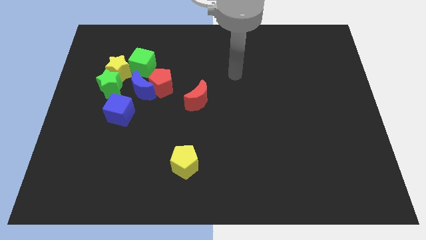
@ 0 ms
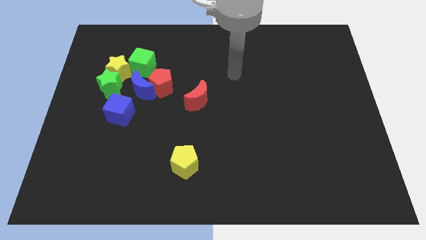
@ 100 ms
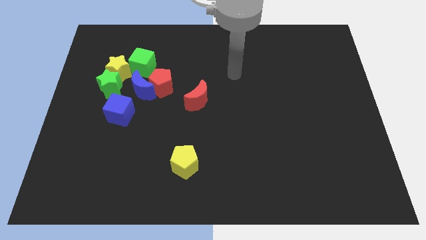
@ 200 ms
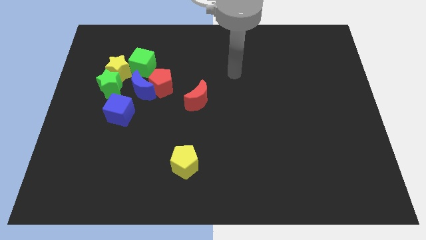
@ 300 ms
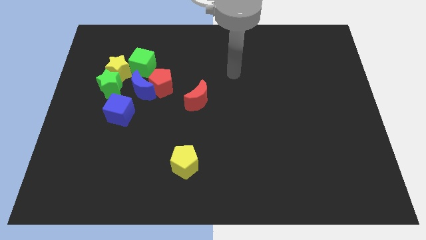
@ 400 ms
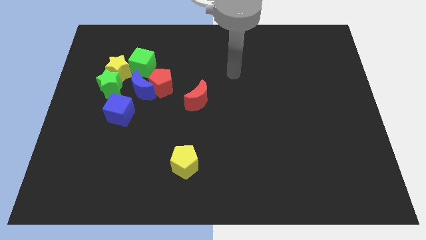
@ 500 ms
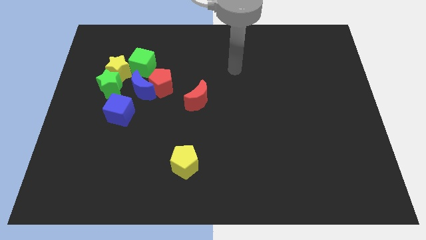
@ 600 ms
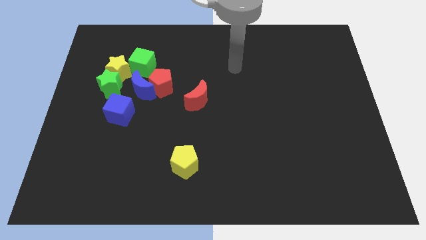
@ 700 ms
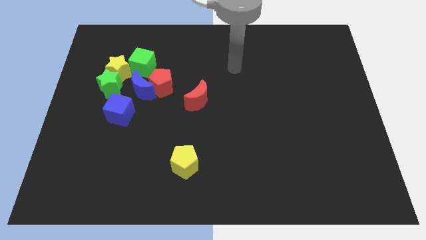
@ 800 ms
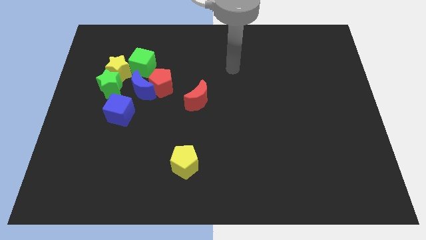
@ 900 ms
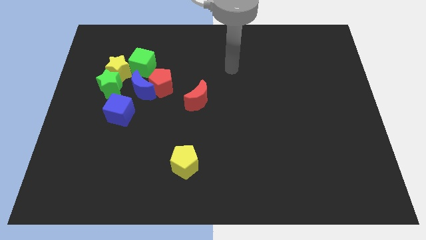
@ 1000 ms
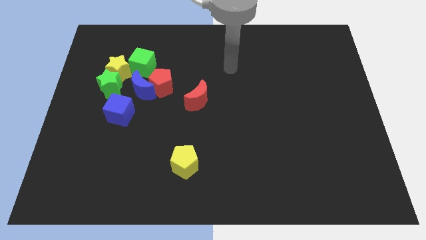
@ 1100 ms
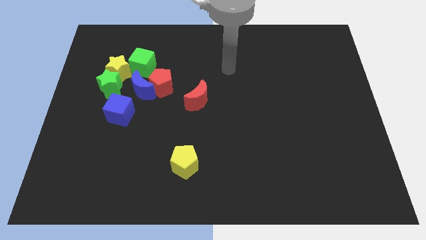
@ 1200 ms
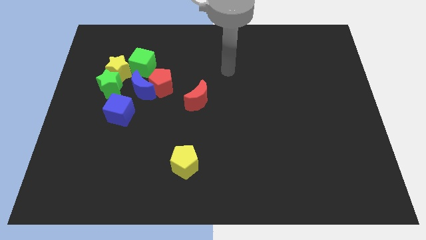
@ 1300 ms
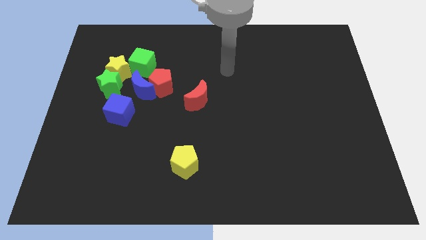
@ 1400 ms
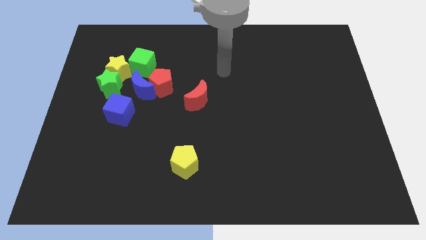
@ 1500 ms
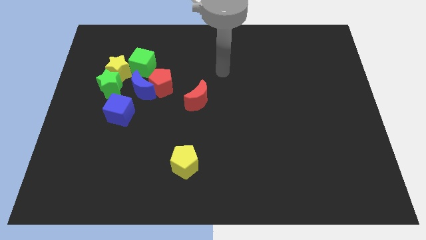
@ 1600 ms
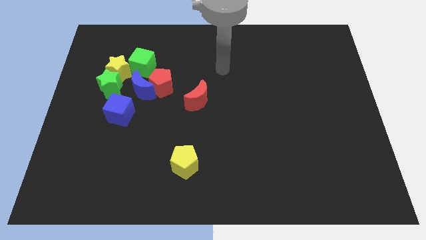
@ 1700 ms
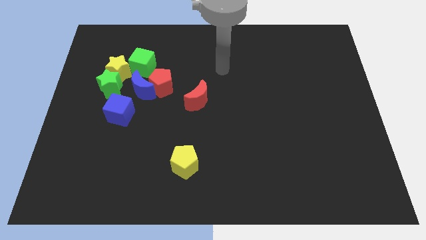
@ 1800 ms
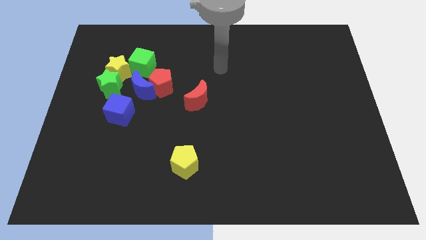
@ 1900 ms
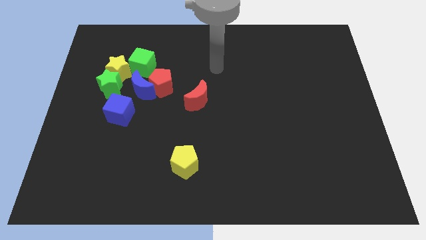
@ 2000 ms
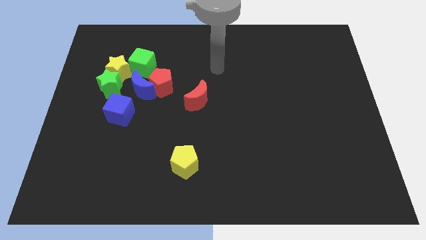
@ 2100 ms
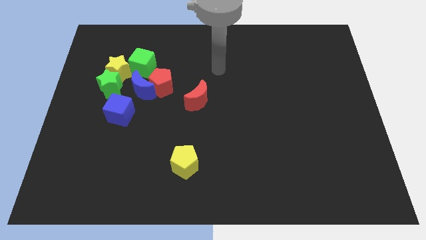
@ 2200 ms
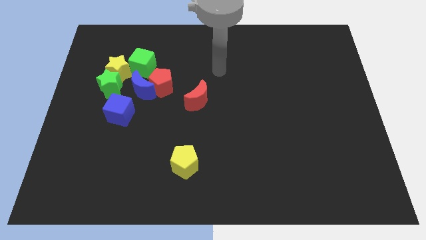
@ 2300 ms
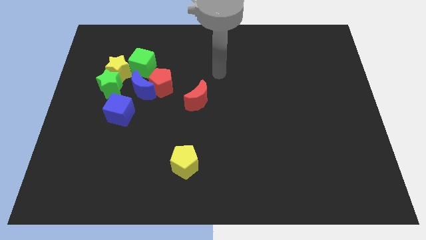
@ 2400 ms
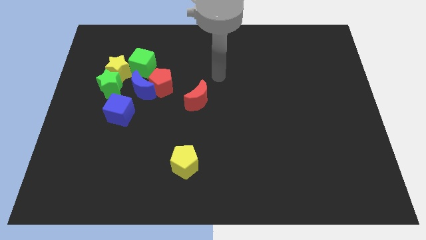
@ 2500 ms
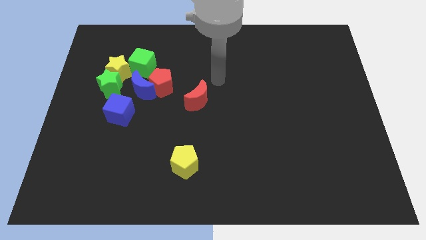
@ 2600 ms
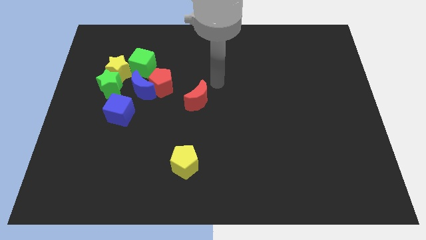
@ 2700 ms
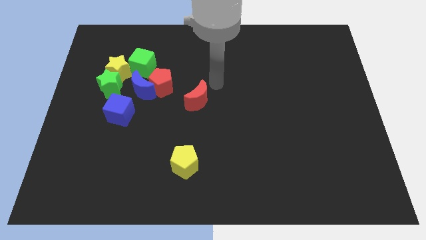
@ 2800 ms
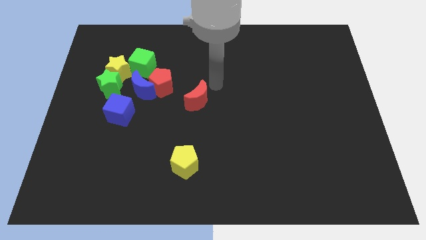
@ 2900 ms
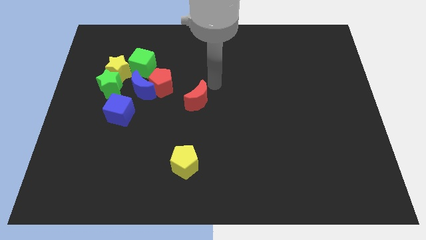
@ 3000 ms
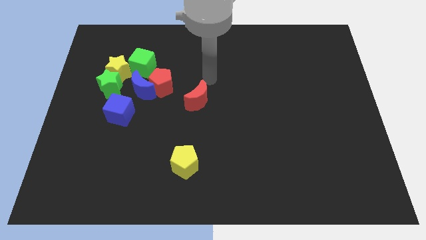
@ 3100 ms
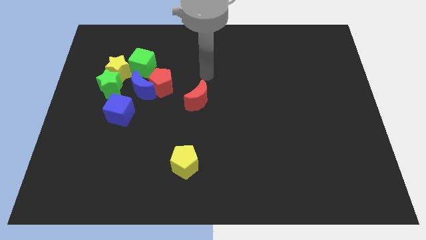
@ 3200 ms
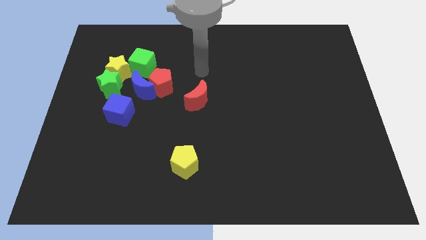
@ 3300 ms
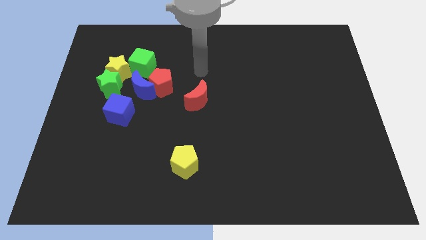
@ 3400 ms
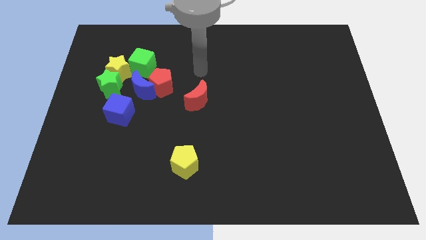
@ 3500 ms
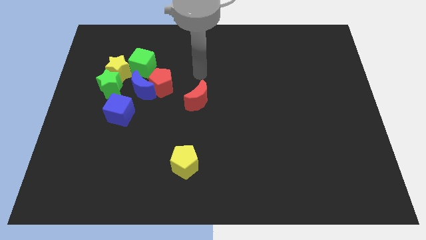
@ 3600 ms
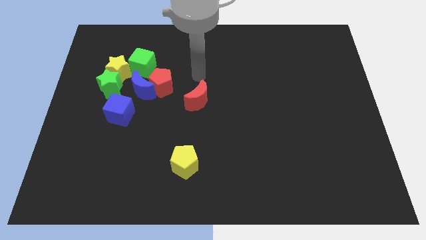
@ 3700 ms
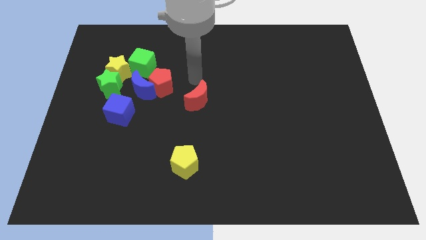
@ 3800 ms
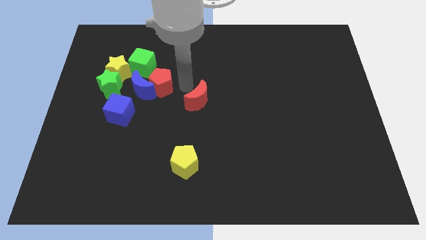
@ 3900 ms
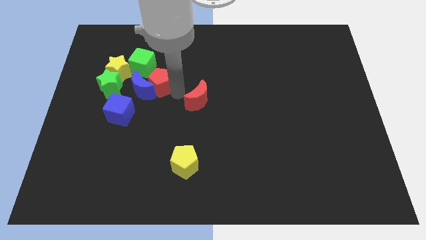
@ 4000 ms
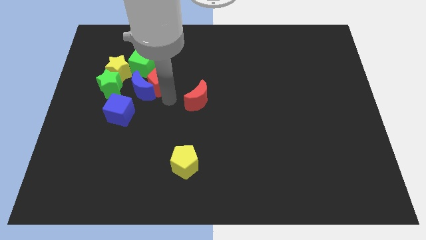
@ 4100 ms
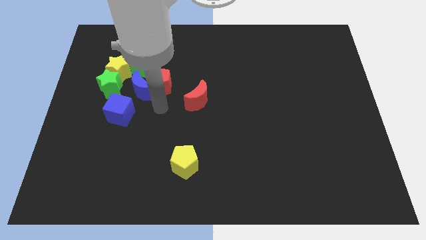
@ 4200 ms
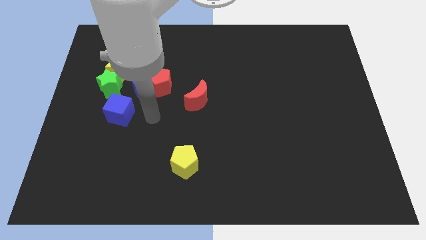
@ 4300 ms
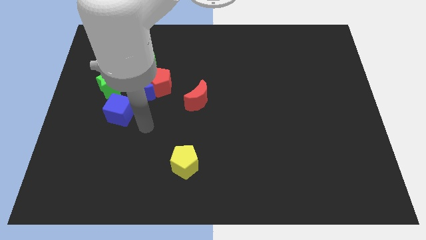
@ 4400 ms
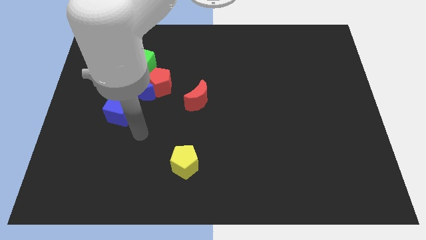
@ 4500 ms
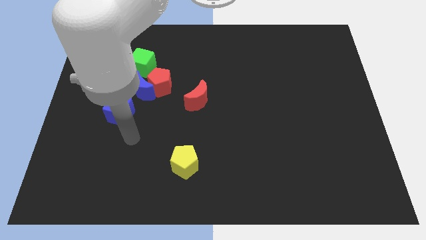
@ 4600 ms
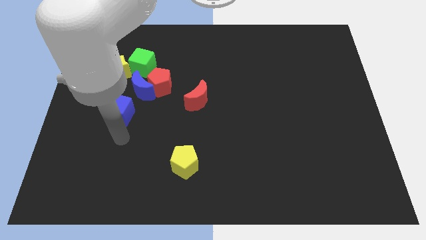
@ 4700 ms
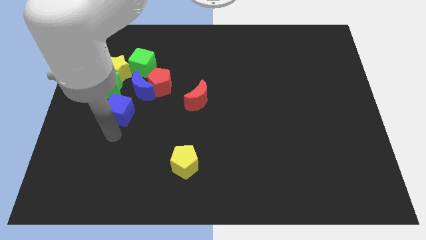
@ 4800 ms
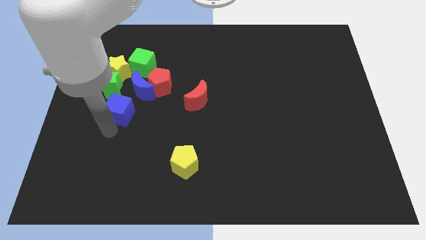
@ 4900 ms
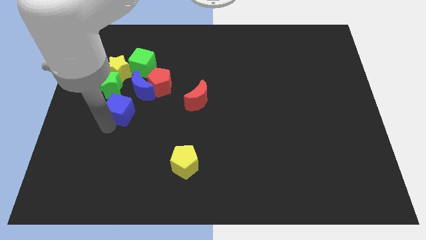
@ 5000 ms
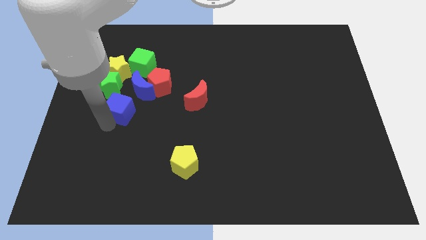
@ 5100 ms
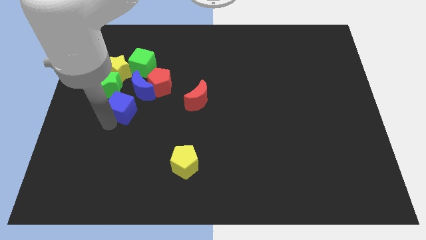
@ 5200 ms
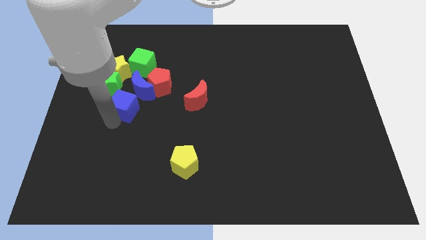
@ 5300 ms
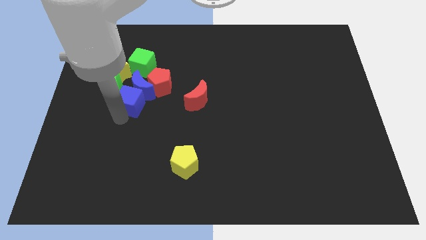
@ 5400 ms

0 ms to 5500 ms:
move the blue cube to the bottom of the blue moon

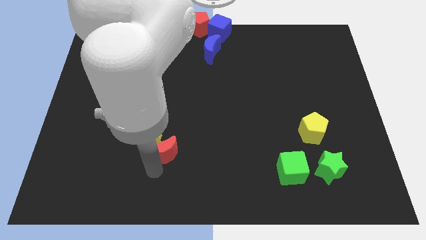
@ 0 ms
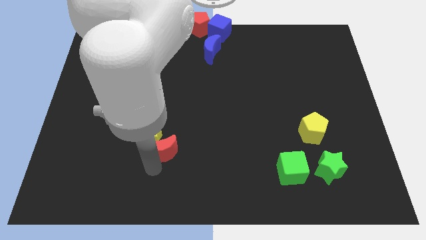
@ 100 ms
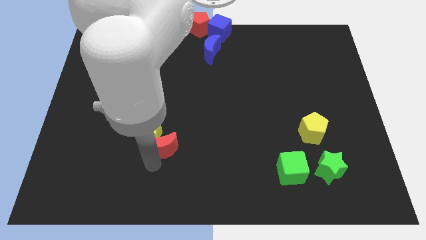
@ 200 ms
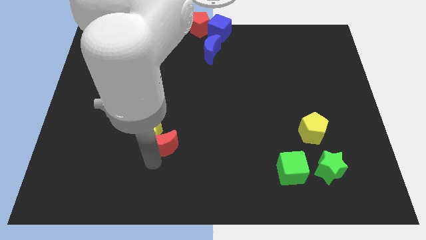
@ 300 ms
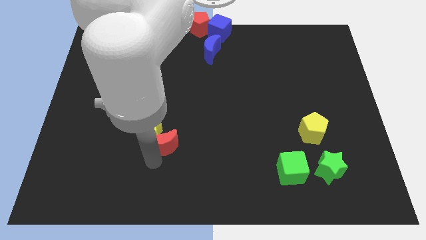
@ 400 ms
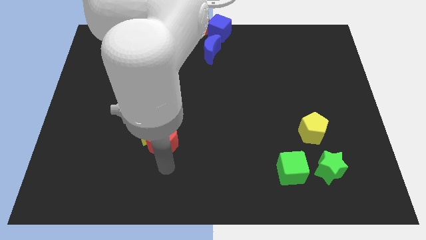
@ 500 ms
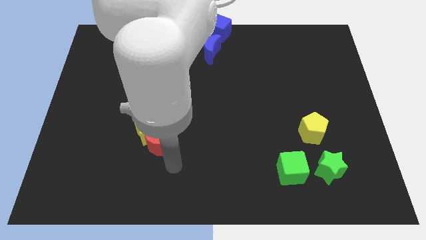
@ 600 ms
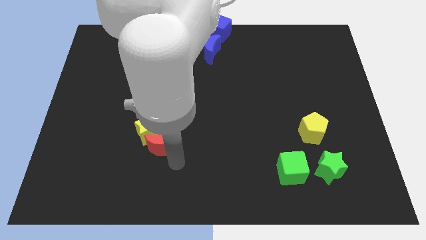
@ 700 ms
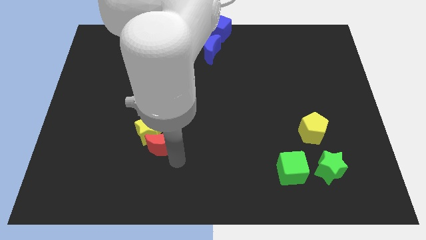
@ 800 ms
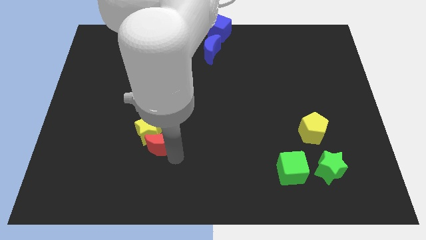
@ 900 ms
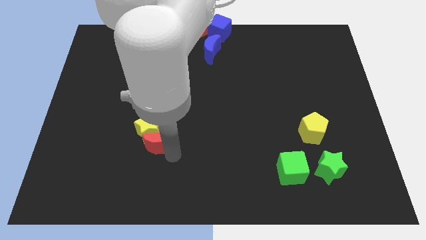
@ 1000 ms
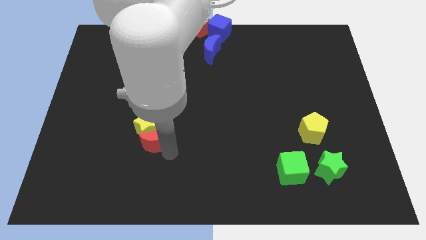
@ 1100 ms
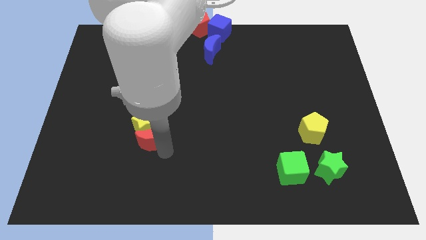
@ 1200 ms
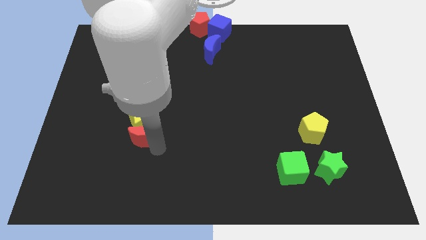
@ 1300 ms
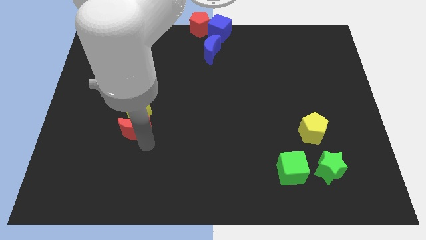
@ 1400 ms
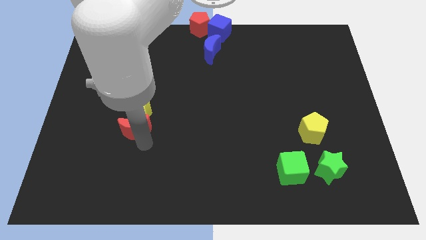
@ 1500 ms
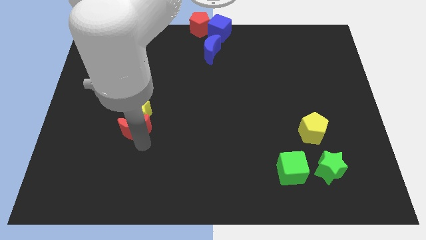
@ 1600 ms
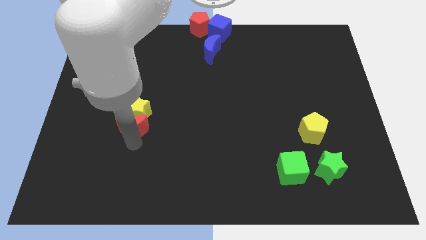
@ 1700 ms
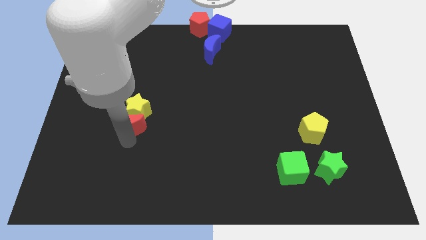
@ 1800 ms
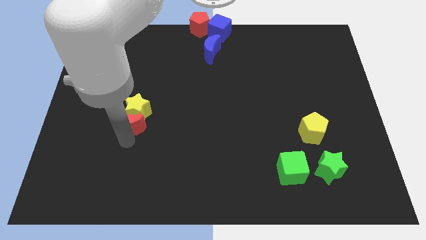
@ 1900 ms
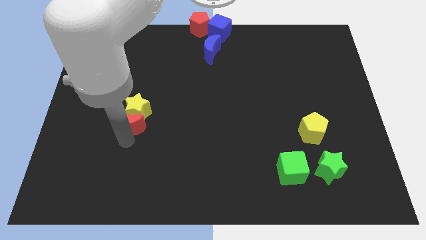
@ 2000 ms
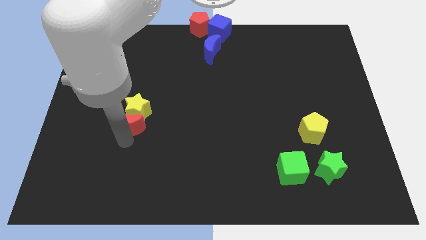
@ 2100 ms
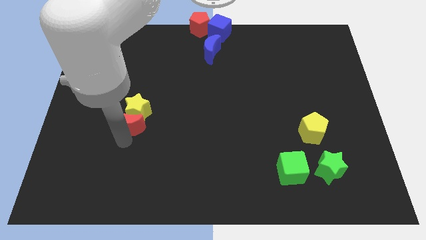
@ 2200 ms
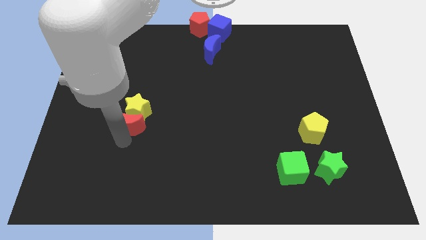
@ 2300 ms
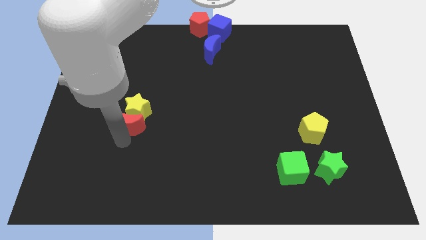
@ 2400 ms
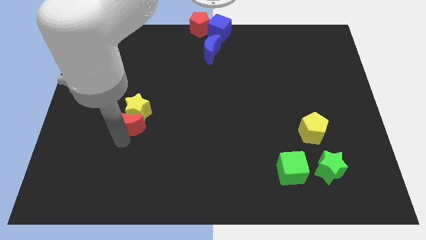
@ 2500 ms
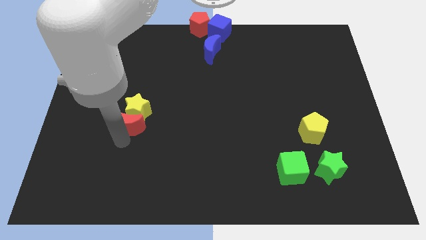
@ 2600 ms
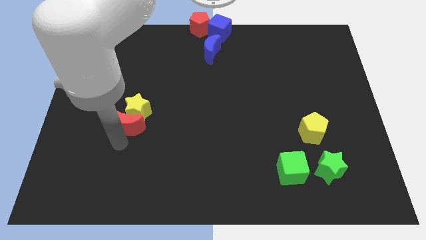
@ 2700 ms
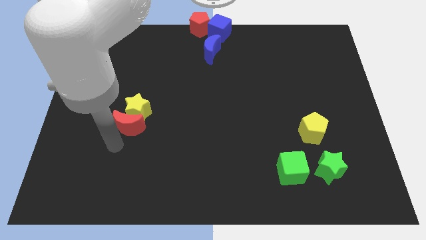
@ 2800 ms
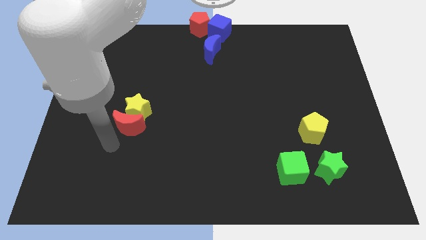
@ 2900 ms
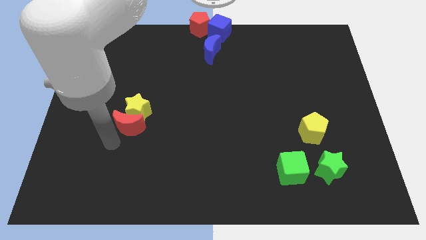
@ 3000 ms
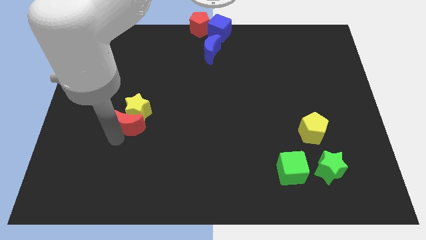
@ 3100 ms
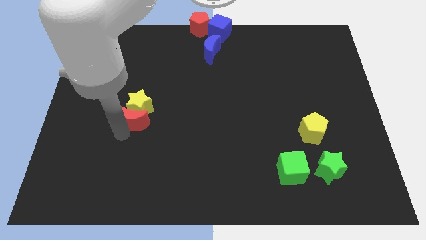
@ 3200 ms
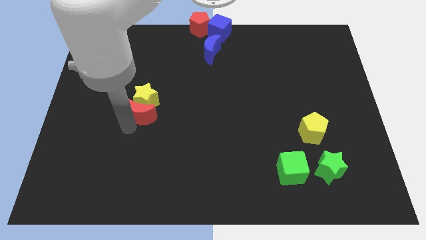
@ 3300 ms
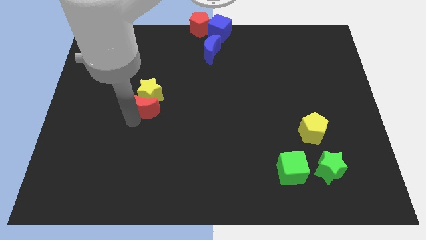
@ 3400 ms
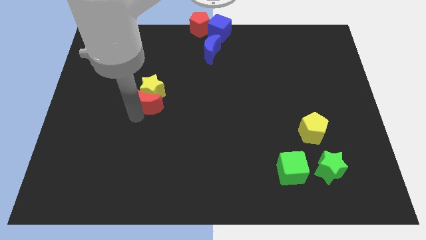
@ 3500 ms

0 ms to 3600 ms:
move red moon and yellow star to center left
